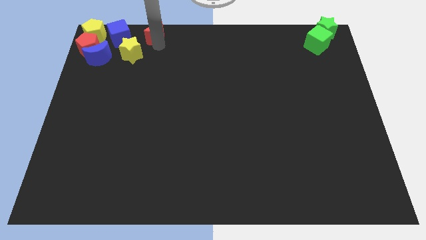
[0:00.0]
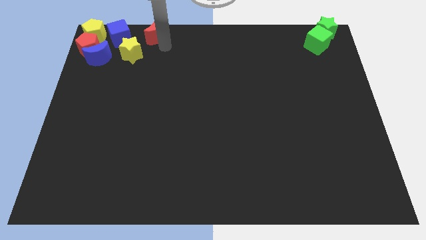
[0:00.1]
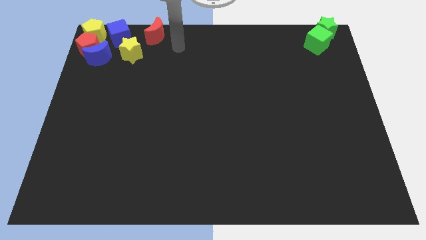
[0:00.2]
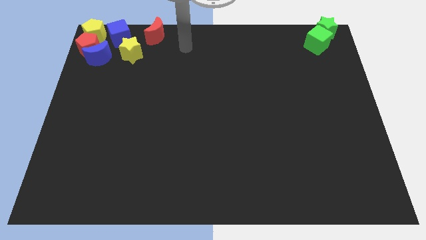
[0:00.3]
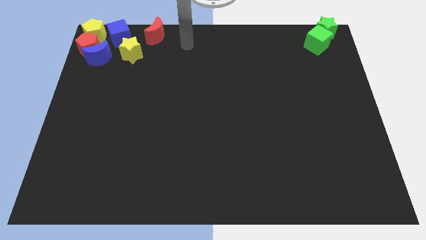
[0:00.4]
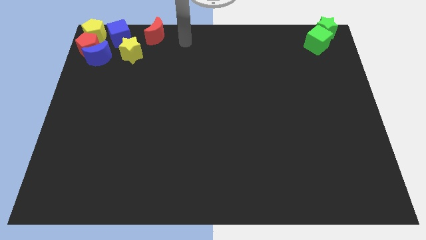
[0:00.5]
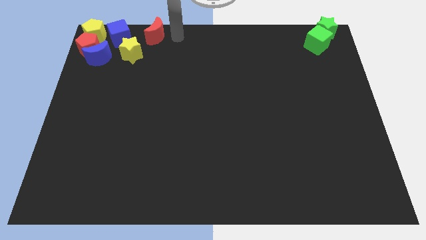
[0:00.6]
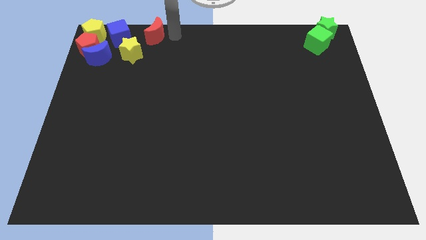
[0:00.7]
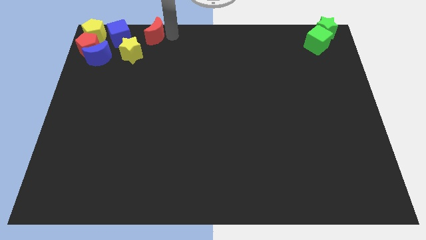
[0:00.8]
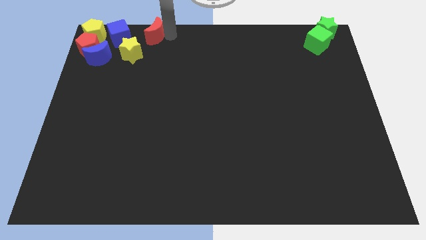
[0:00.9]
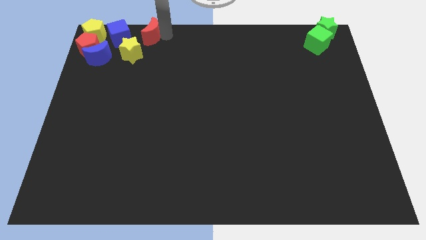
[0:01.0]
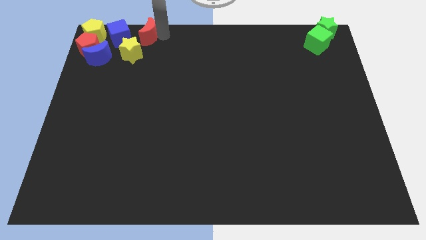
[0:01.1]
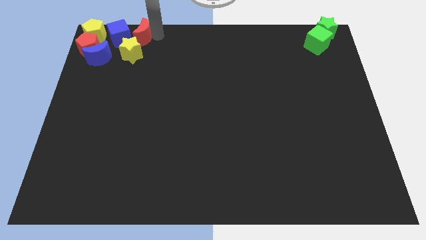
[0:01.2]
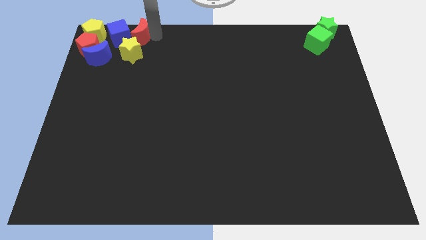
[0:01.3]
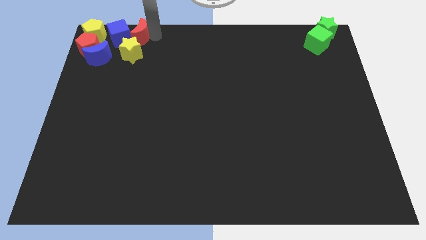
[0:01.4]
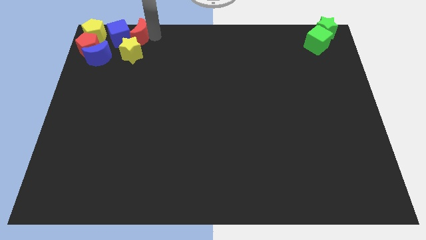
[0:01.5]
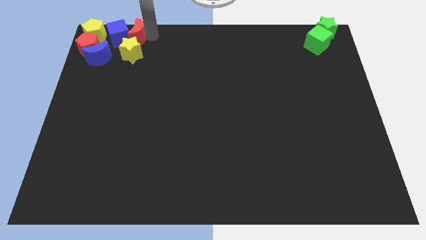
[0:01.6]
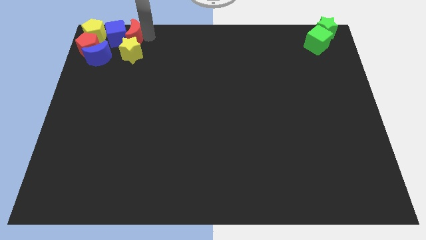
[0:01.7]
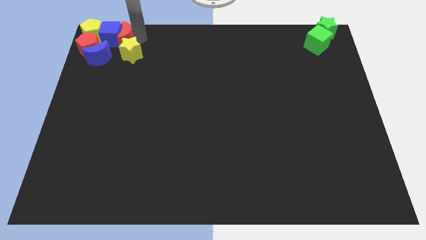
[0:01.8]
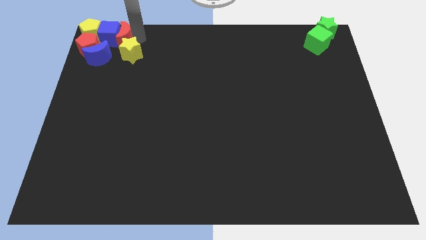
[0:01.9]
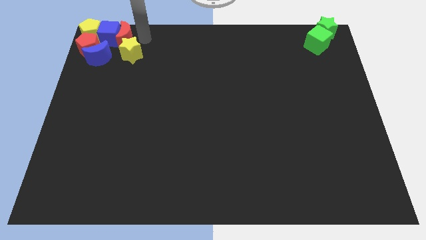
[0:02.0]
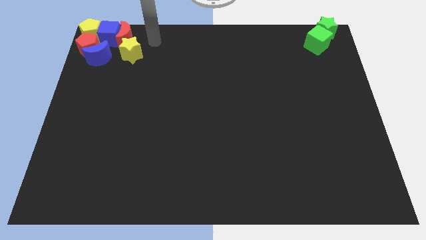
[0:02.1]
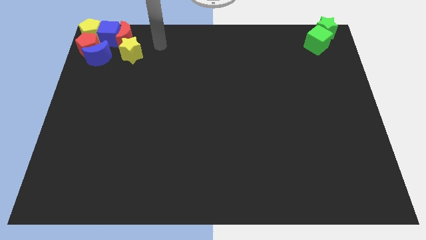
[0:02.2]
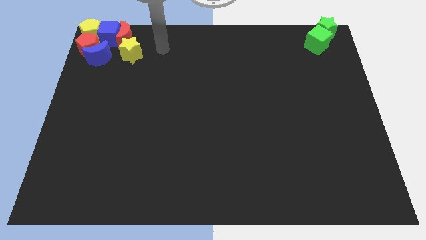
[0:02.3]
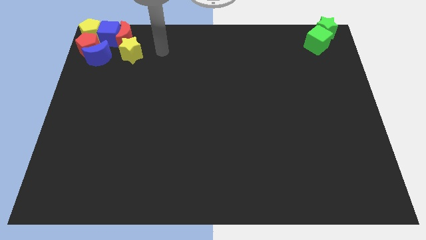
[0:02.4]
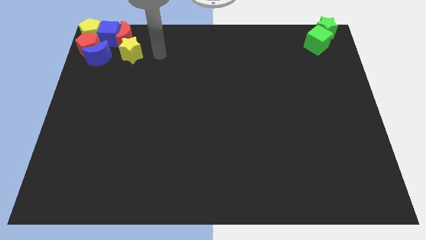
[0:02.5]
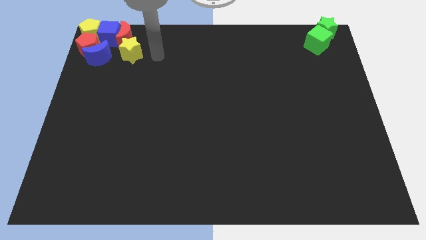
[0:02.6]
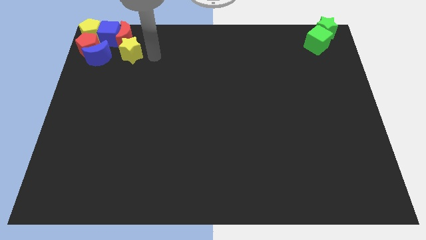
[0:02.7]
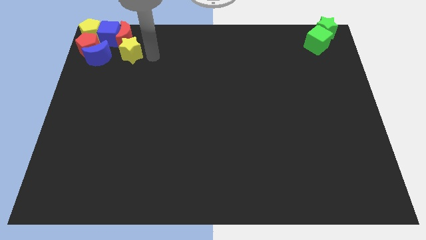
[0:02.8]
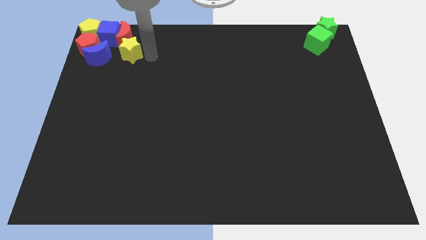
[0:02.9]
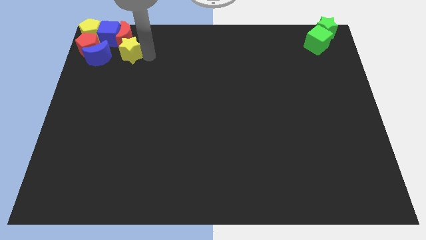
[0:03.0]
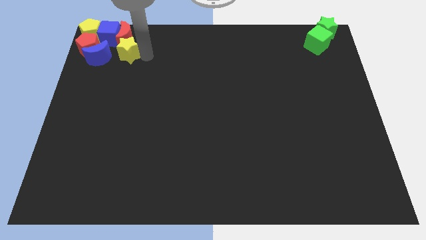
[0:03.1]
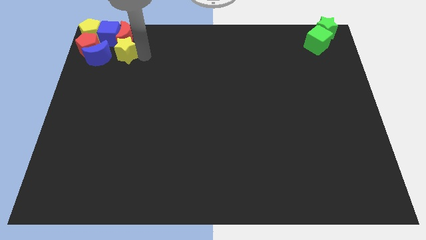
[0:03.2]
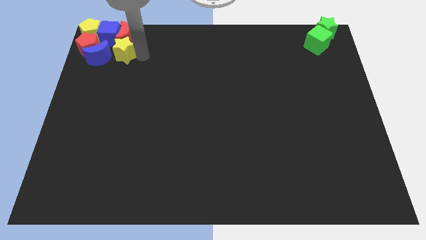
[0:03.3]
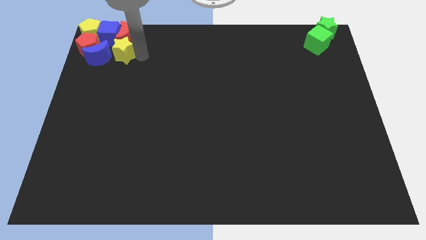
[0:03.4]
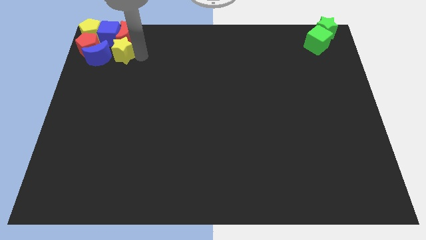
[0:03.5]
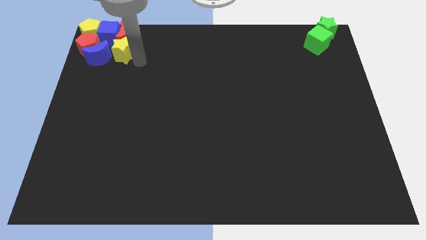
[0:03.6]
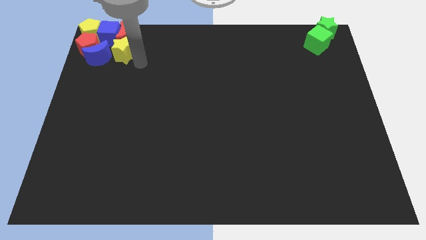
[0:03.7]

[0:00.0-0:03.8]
move the red crescent and yellow star into the group of blocks

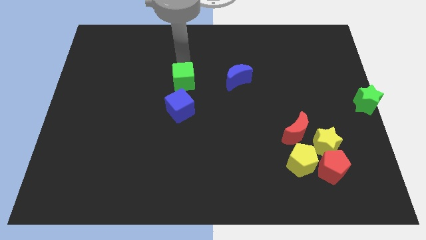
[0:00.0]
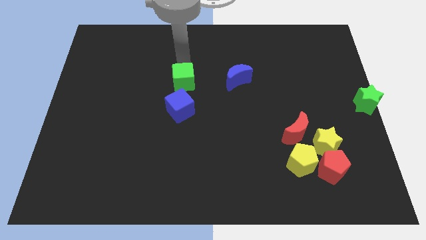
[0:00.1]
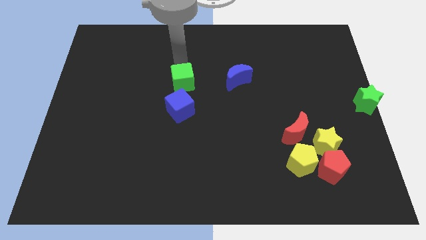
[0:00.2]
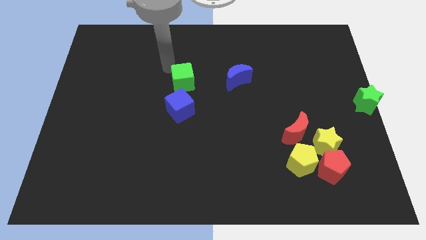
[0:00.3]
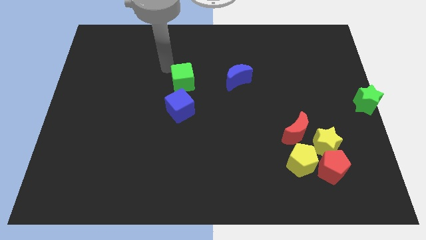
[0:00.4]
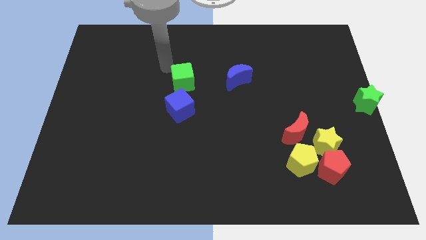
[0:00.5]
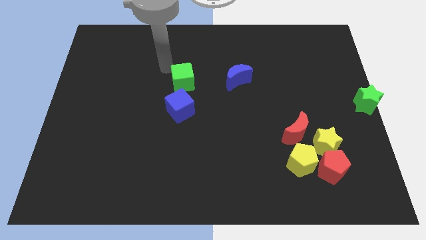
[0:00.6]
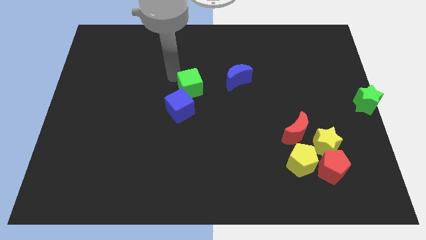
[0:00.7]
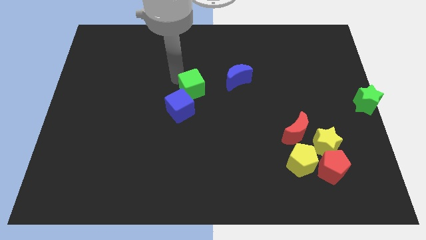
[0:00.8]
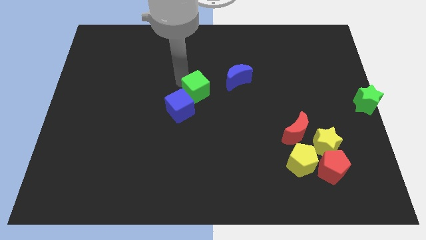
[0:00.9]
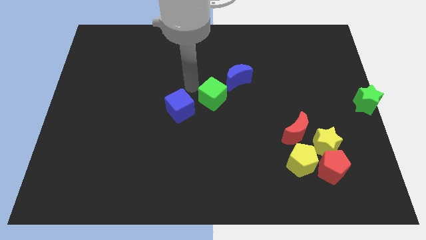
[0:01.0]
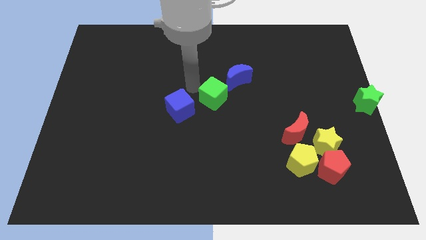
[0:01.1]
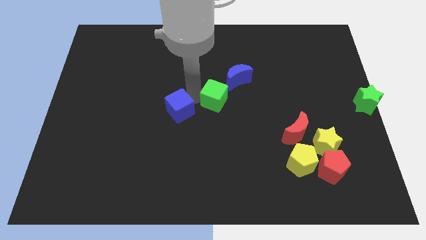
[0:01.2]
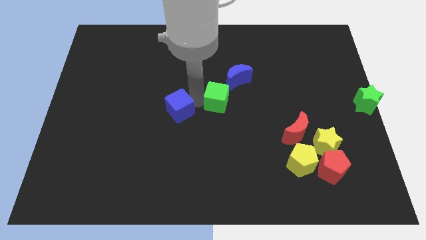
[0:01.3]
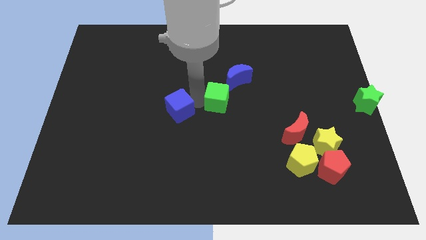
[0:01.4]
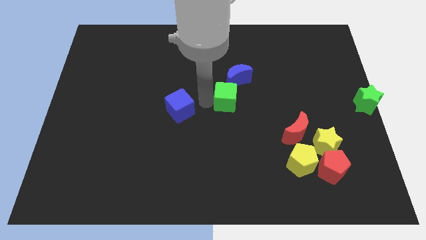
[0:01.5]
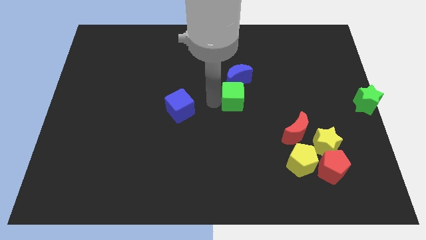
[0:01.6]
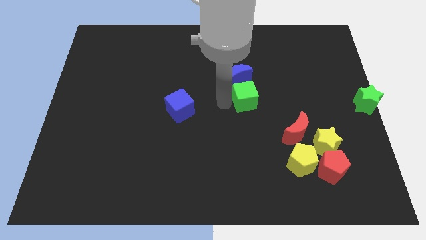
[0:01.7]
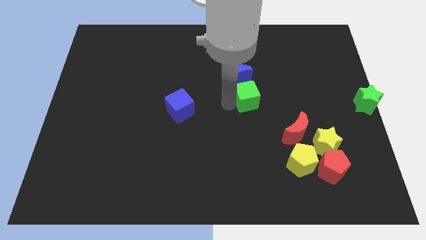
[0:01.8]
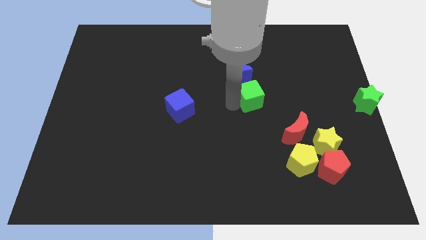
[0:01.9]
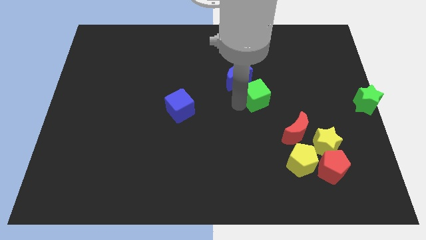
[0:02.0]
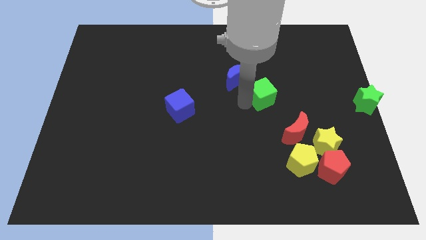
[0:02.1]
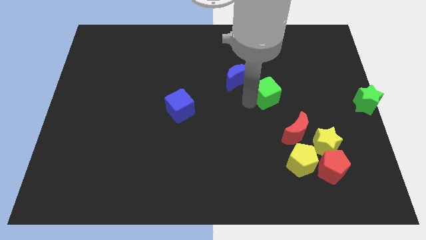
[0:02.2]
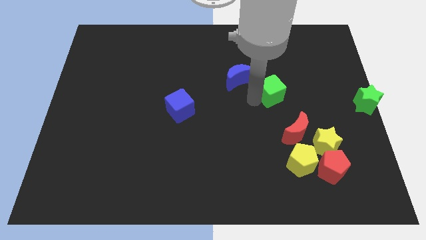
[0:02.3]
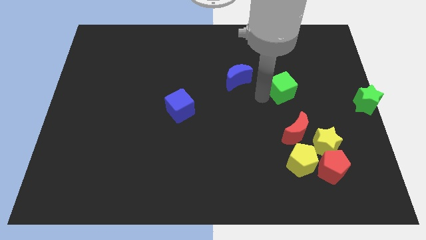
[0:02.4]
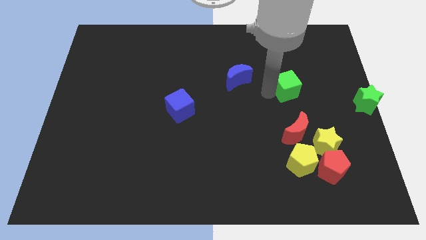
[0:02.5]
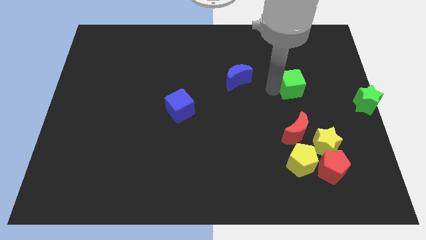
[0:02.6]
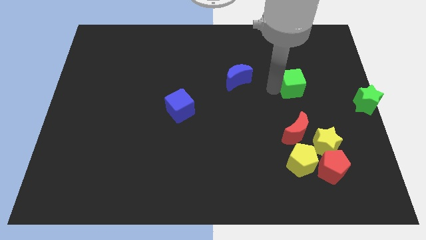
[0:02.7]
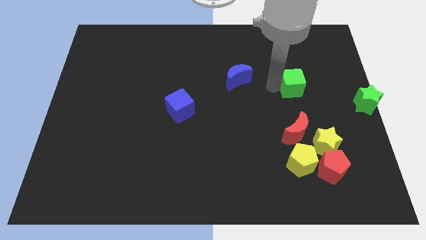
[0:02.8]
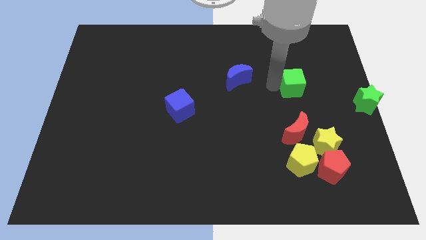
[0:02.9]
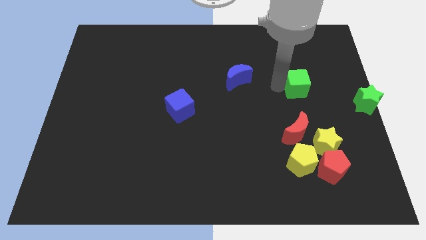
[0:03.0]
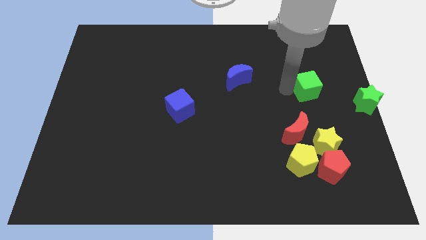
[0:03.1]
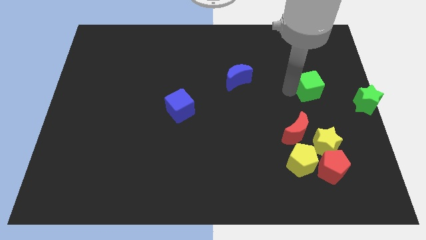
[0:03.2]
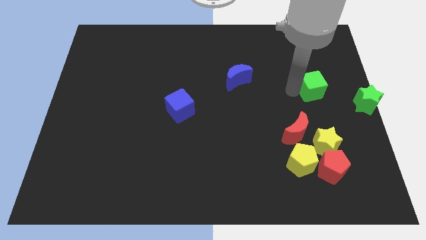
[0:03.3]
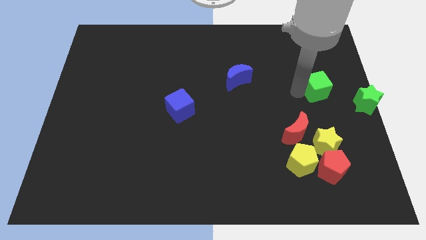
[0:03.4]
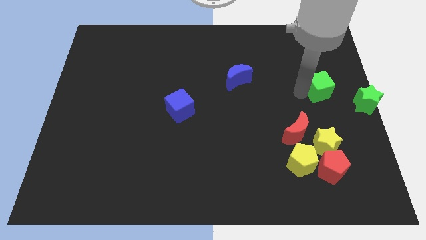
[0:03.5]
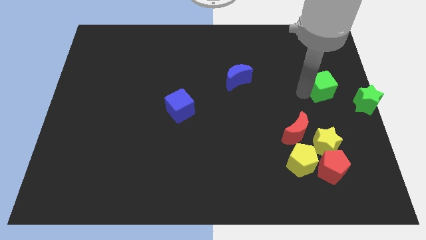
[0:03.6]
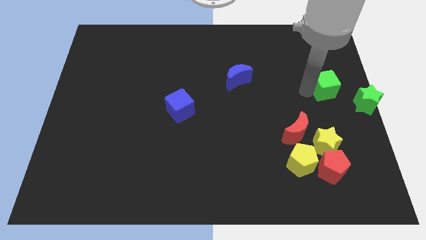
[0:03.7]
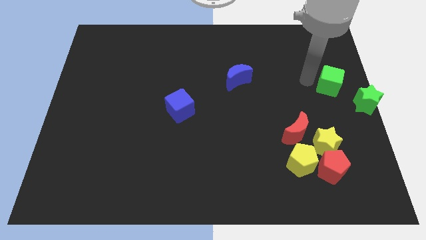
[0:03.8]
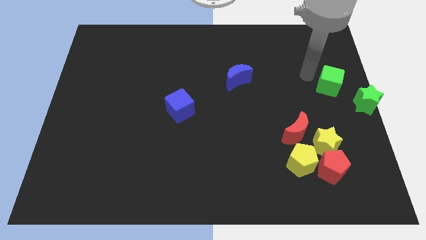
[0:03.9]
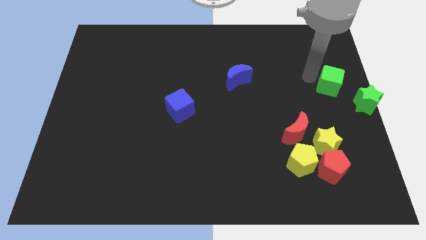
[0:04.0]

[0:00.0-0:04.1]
push green cube towards green star

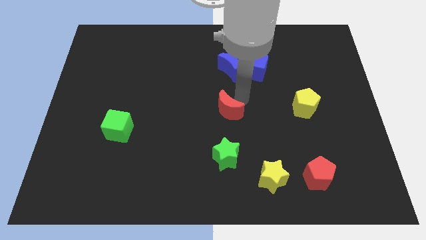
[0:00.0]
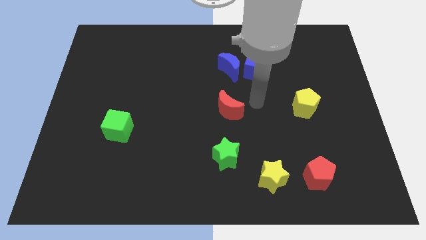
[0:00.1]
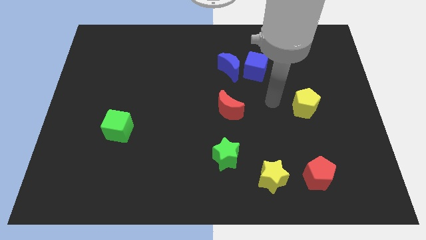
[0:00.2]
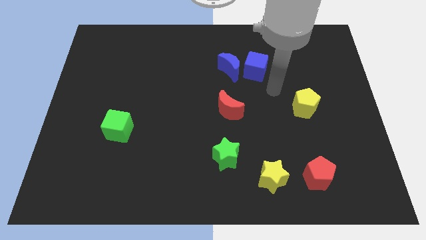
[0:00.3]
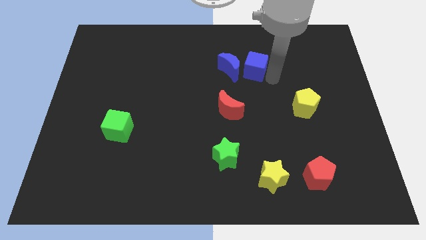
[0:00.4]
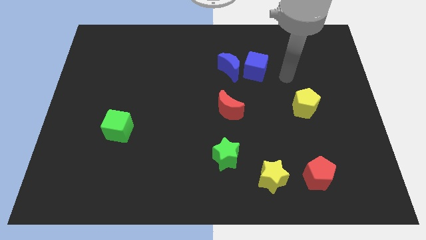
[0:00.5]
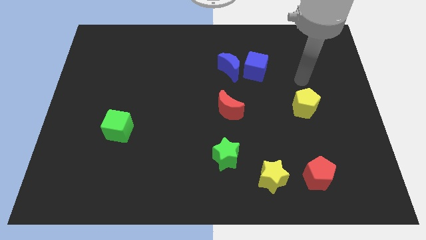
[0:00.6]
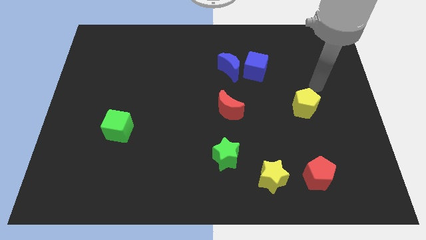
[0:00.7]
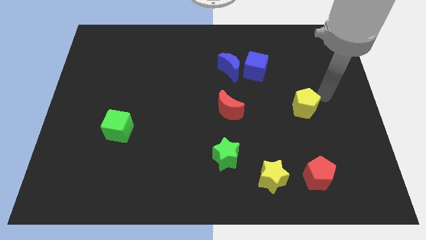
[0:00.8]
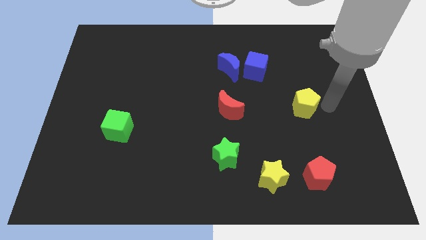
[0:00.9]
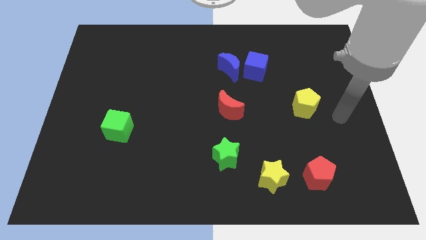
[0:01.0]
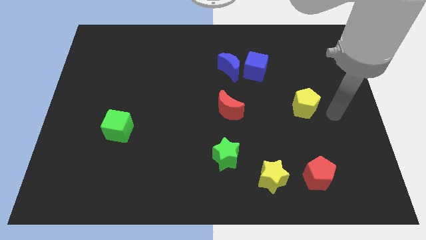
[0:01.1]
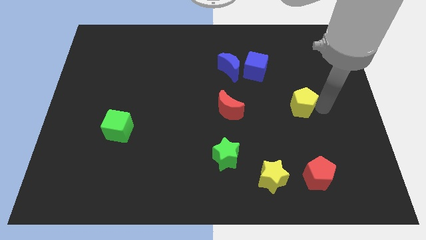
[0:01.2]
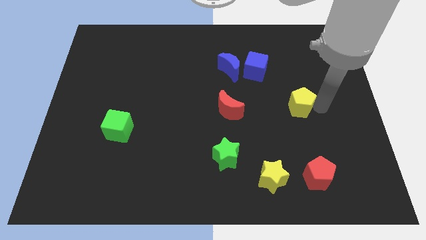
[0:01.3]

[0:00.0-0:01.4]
move your arm to the right side of yellow pentagon
